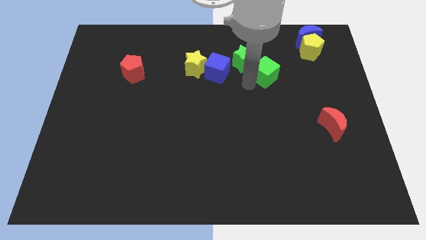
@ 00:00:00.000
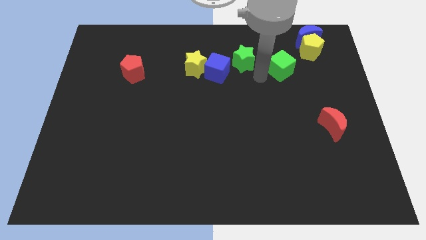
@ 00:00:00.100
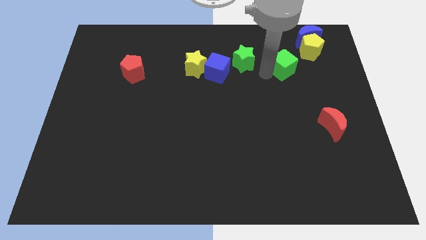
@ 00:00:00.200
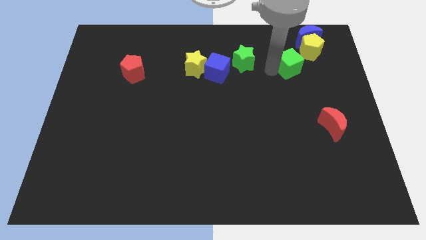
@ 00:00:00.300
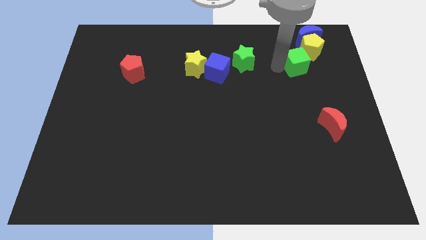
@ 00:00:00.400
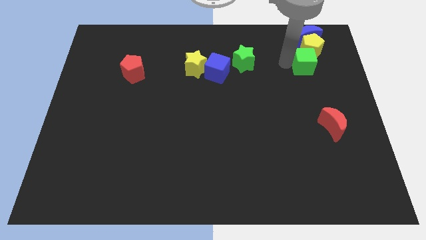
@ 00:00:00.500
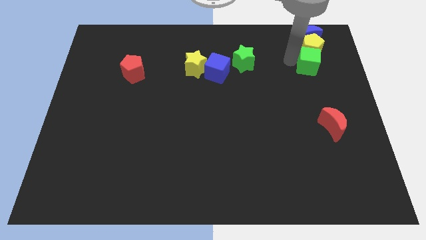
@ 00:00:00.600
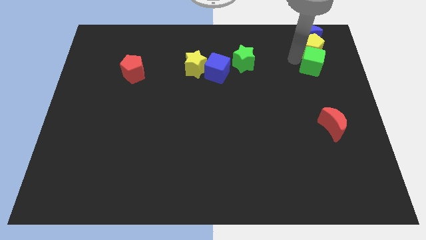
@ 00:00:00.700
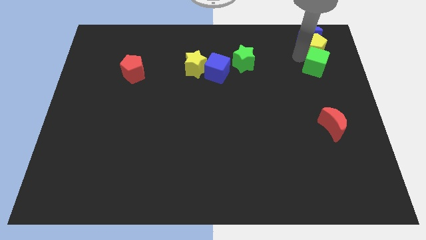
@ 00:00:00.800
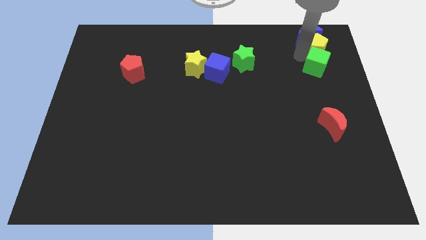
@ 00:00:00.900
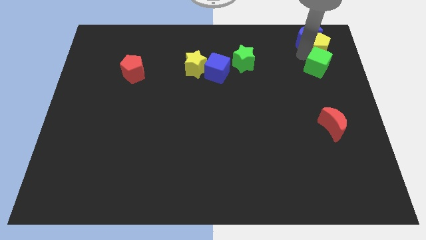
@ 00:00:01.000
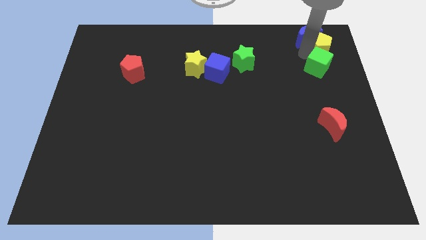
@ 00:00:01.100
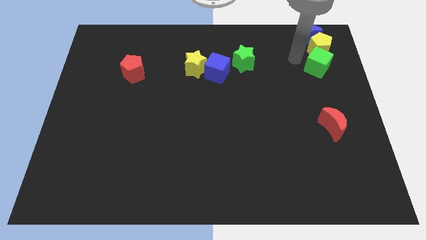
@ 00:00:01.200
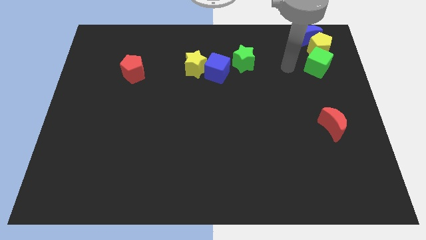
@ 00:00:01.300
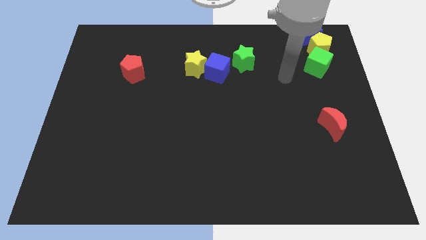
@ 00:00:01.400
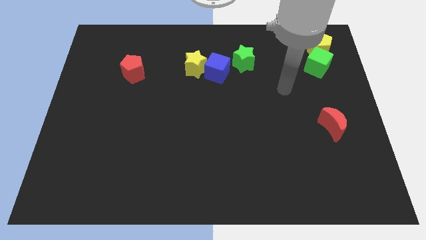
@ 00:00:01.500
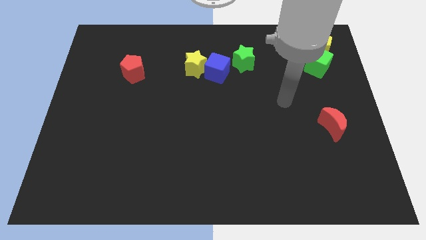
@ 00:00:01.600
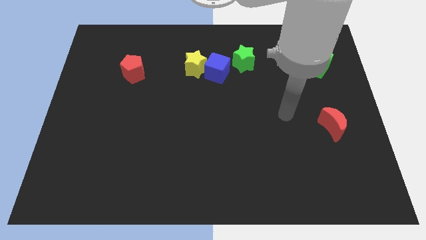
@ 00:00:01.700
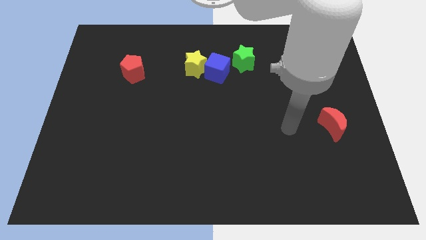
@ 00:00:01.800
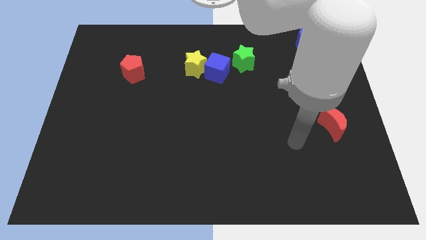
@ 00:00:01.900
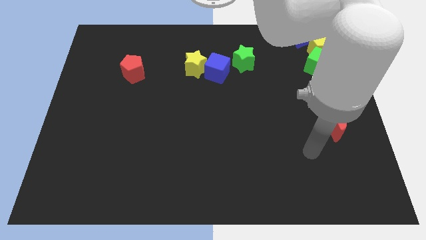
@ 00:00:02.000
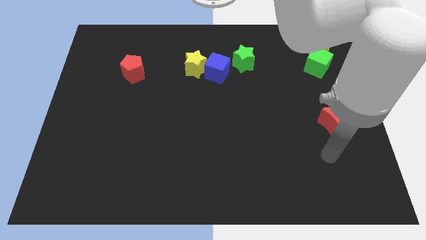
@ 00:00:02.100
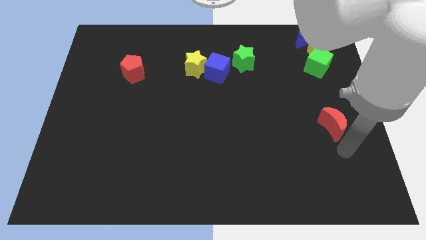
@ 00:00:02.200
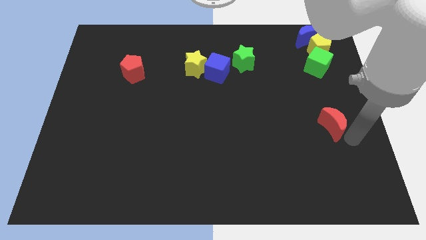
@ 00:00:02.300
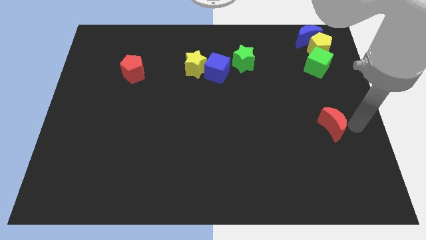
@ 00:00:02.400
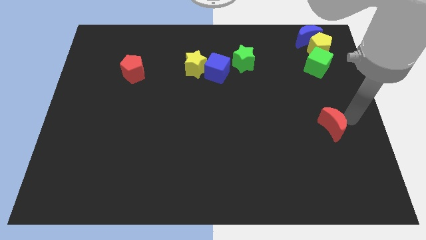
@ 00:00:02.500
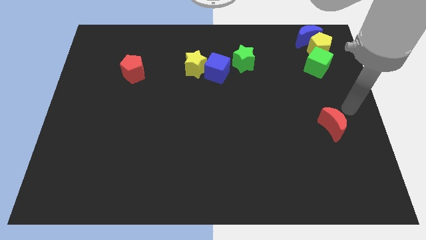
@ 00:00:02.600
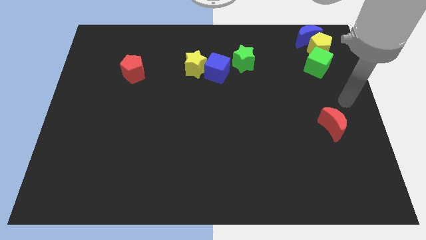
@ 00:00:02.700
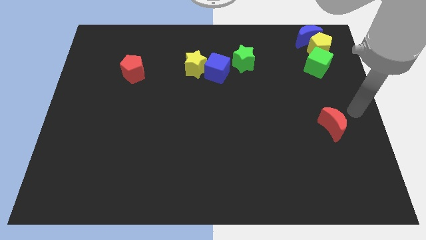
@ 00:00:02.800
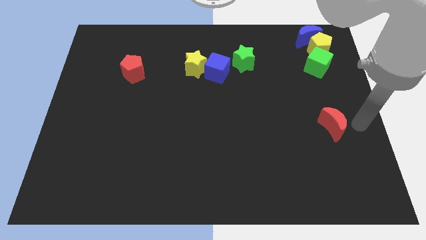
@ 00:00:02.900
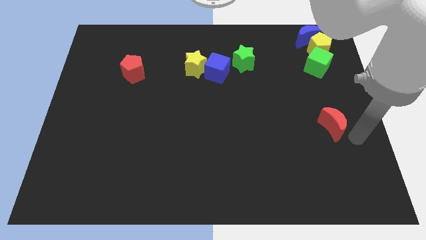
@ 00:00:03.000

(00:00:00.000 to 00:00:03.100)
push green cube down to the yellow pentagon

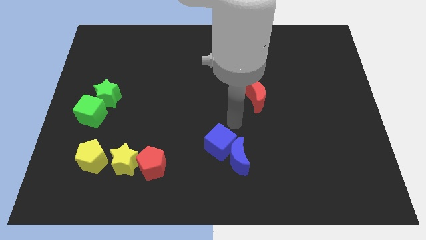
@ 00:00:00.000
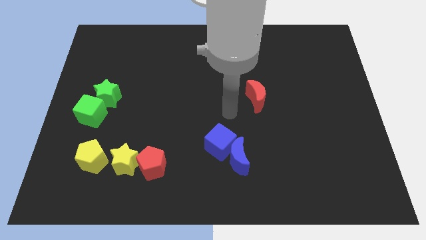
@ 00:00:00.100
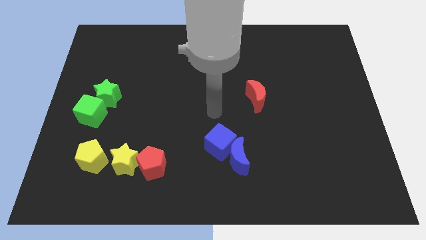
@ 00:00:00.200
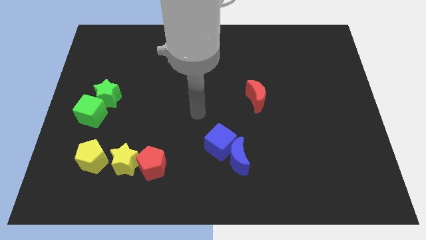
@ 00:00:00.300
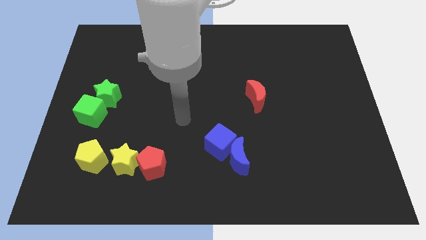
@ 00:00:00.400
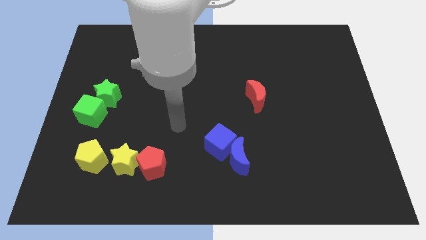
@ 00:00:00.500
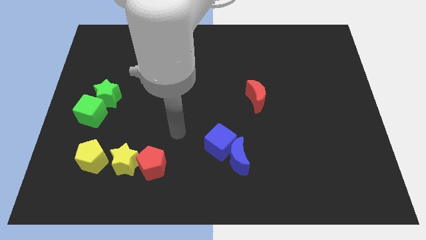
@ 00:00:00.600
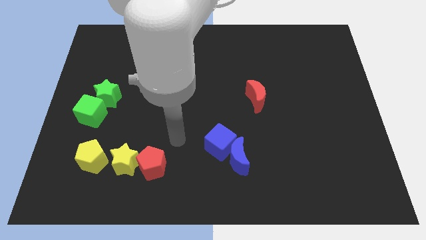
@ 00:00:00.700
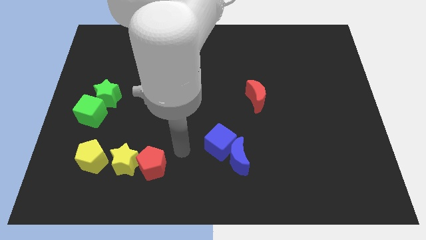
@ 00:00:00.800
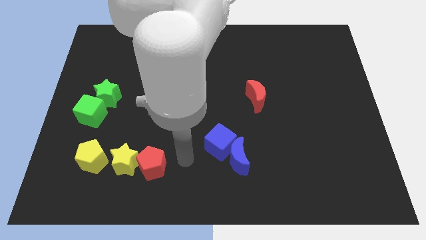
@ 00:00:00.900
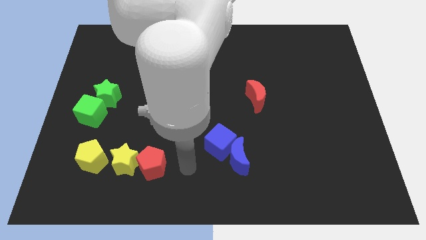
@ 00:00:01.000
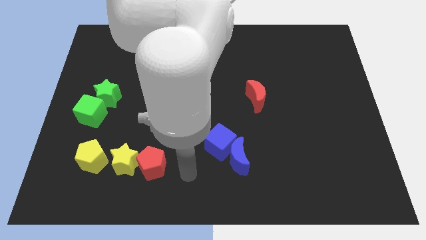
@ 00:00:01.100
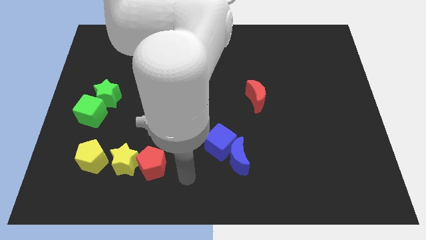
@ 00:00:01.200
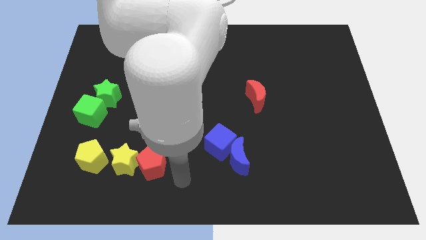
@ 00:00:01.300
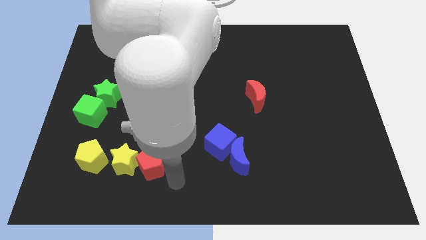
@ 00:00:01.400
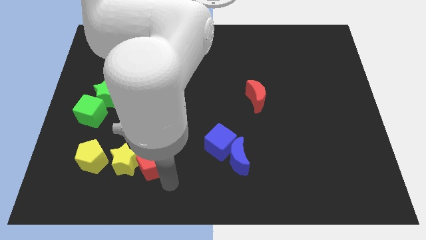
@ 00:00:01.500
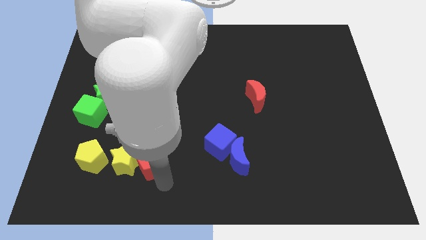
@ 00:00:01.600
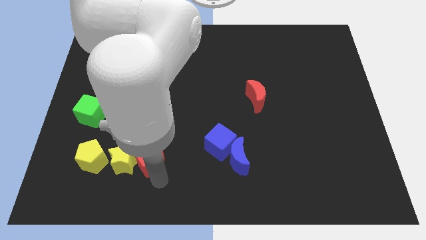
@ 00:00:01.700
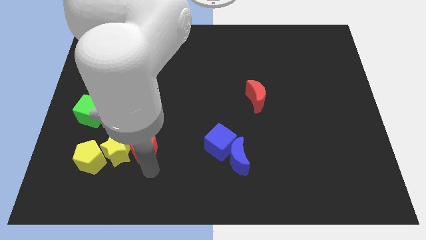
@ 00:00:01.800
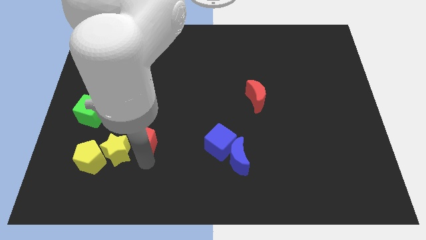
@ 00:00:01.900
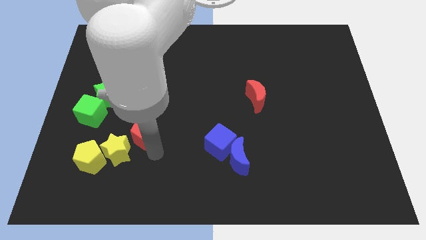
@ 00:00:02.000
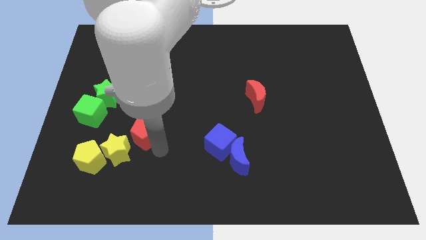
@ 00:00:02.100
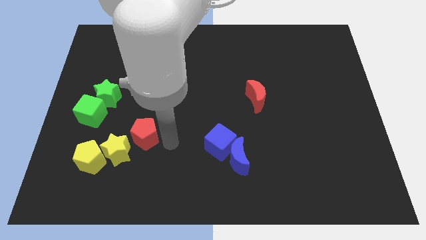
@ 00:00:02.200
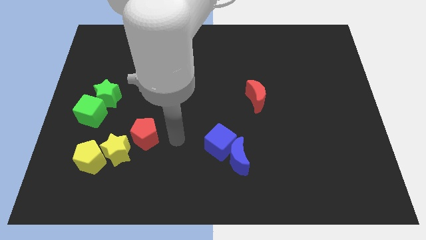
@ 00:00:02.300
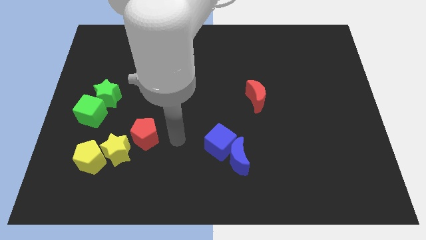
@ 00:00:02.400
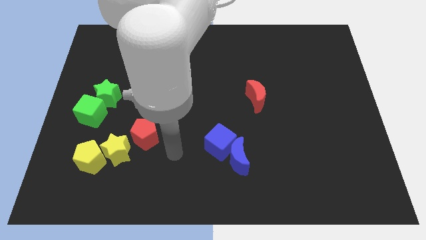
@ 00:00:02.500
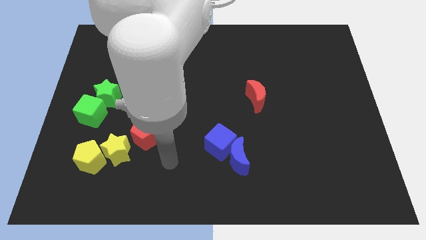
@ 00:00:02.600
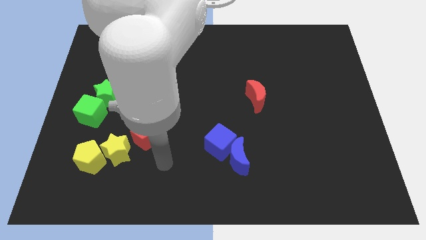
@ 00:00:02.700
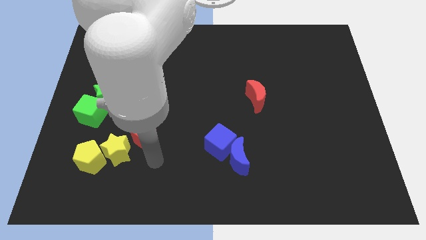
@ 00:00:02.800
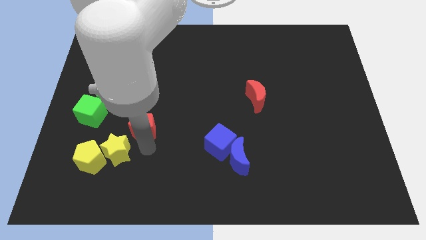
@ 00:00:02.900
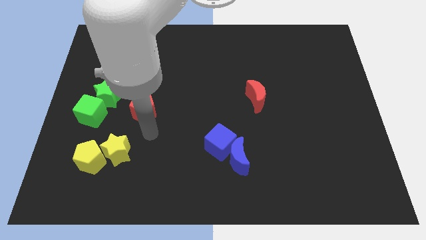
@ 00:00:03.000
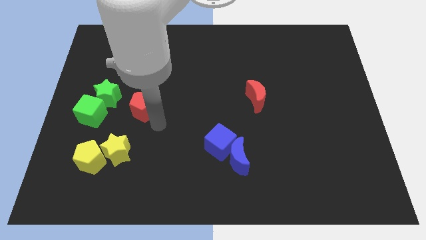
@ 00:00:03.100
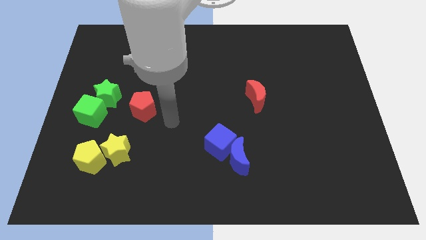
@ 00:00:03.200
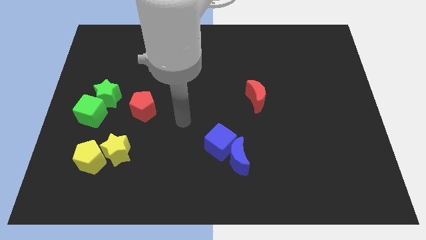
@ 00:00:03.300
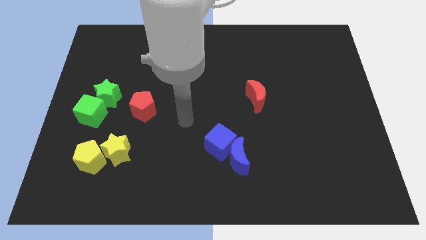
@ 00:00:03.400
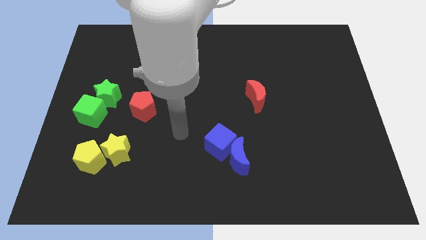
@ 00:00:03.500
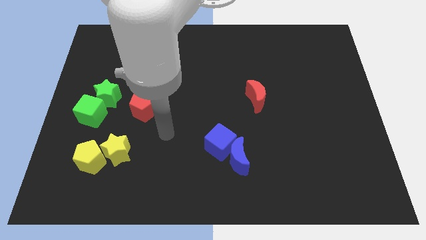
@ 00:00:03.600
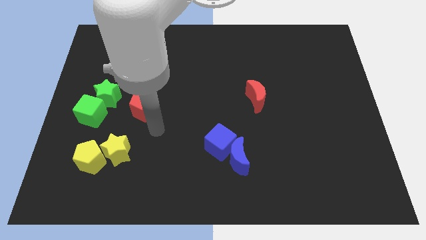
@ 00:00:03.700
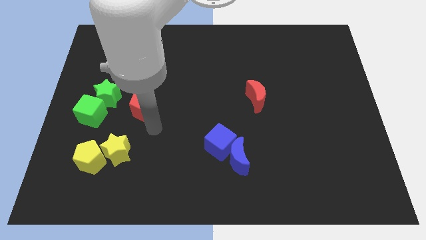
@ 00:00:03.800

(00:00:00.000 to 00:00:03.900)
slide the red pentagon to the right side of the green star

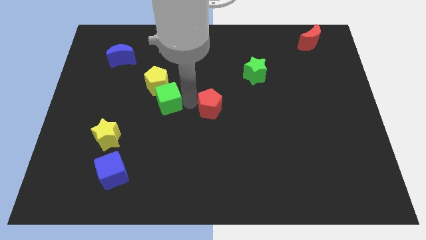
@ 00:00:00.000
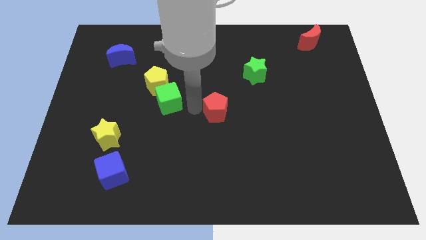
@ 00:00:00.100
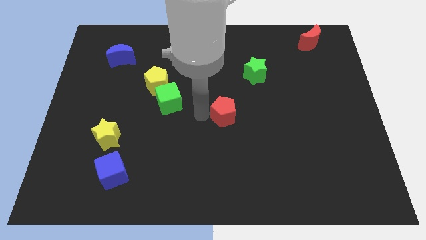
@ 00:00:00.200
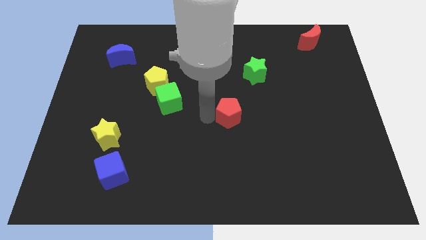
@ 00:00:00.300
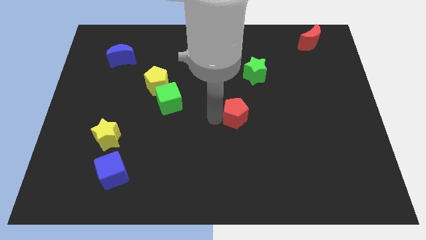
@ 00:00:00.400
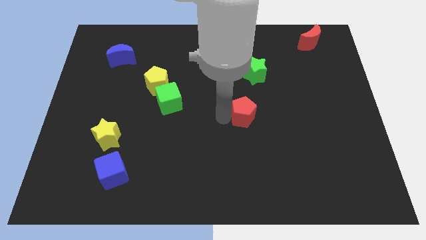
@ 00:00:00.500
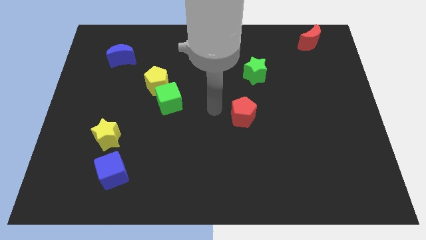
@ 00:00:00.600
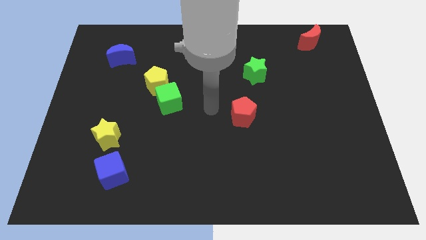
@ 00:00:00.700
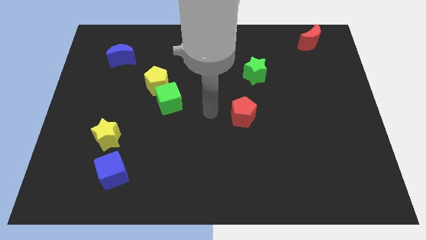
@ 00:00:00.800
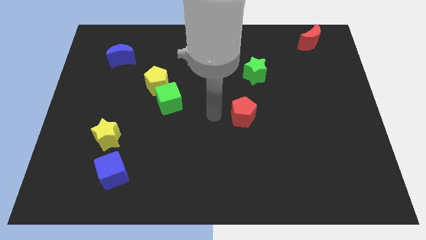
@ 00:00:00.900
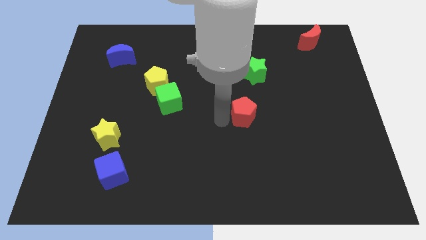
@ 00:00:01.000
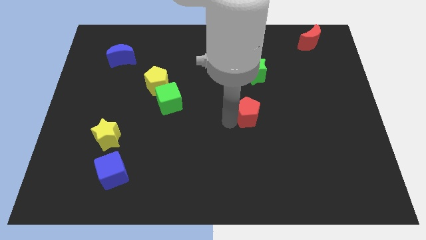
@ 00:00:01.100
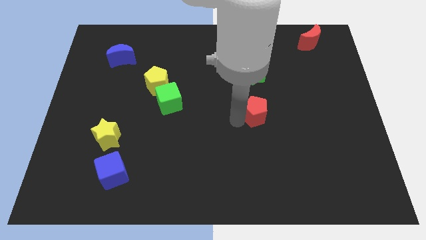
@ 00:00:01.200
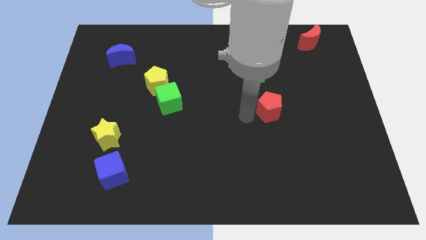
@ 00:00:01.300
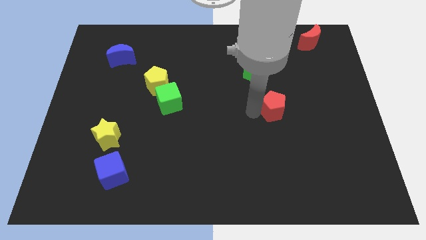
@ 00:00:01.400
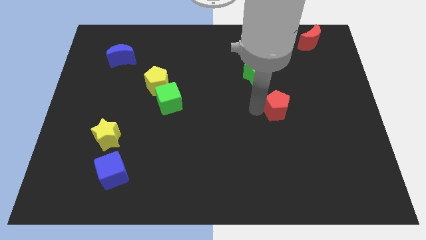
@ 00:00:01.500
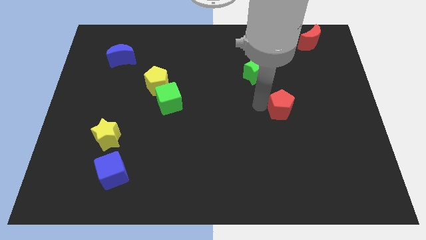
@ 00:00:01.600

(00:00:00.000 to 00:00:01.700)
push red pentagon below green star

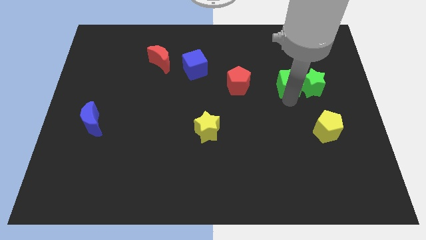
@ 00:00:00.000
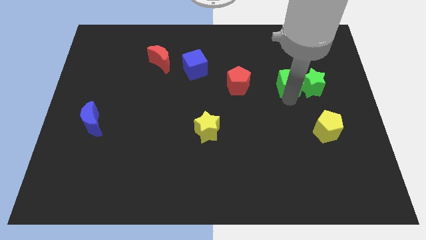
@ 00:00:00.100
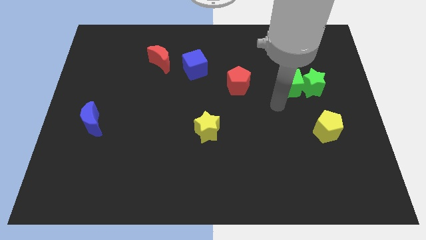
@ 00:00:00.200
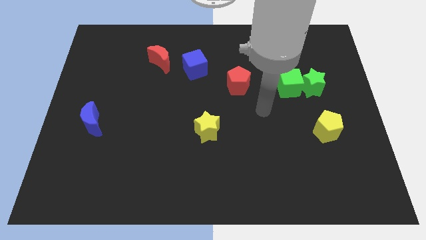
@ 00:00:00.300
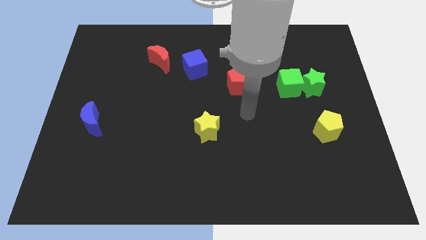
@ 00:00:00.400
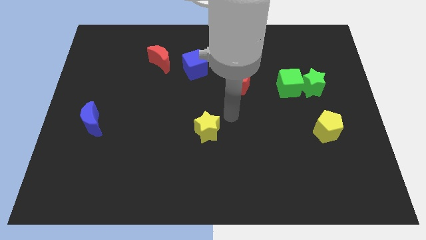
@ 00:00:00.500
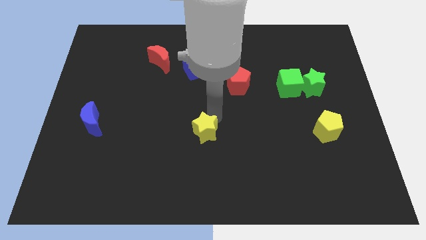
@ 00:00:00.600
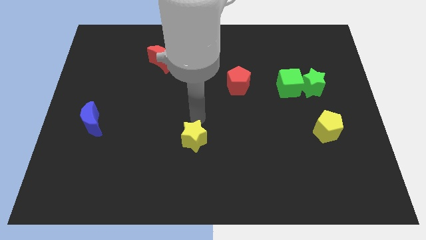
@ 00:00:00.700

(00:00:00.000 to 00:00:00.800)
move your arm away from the green cube
